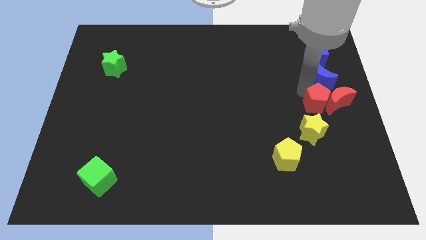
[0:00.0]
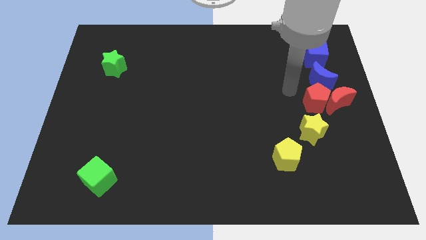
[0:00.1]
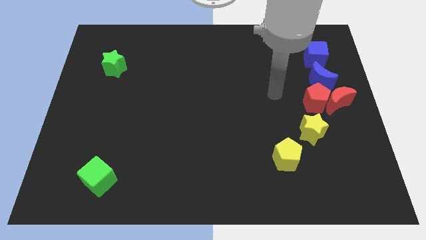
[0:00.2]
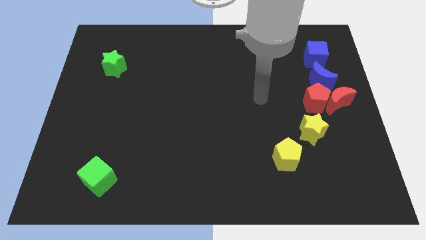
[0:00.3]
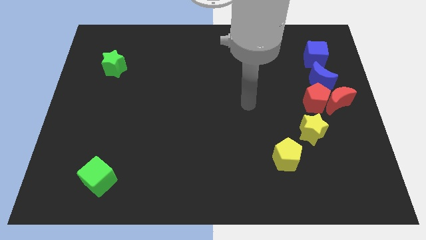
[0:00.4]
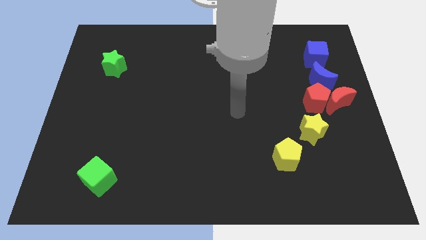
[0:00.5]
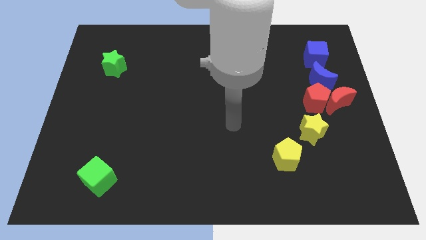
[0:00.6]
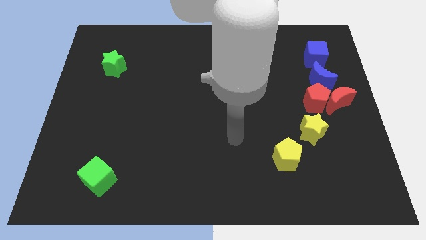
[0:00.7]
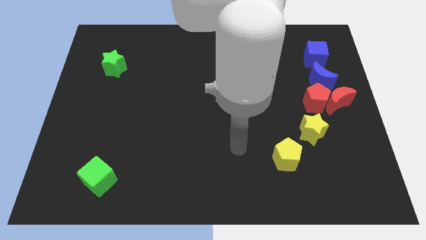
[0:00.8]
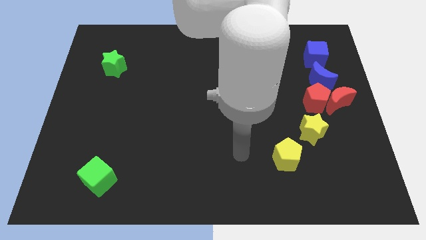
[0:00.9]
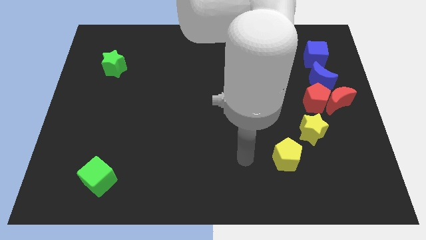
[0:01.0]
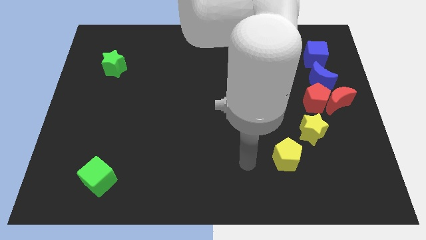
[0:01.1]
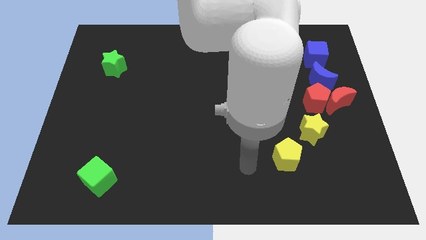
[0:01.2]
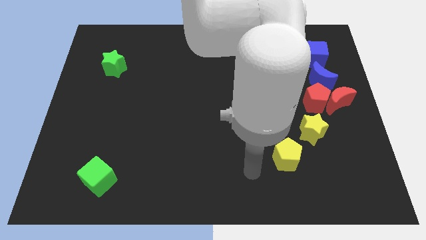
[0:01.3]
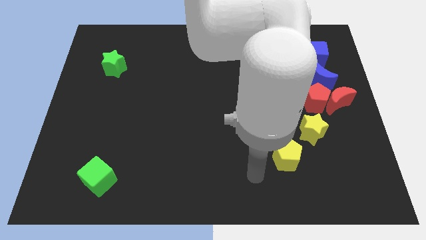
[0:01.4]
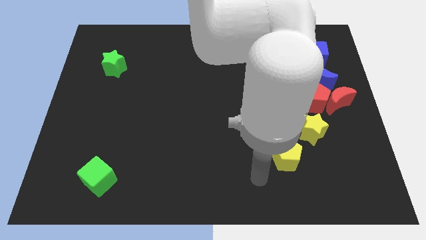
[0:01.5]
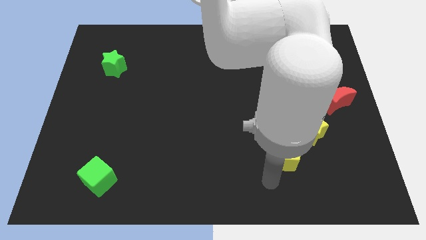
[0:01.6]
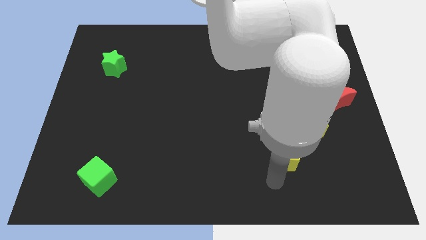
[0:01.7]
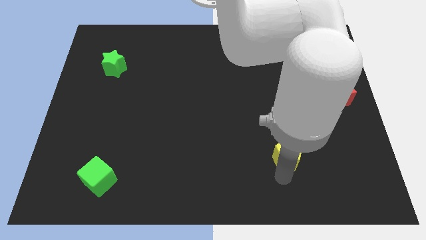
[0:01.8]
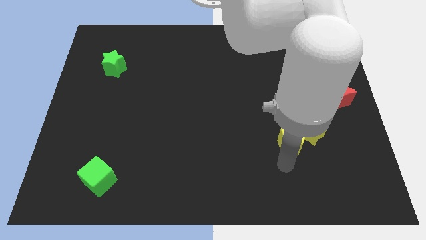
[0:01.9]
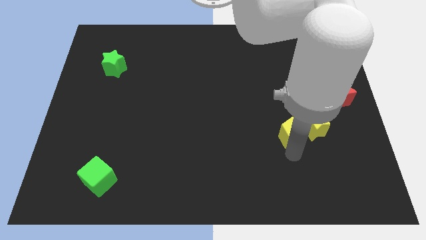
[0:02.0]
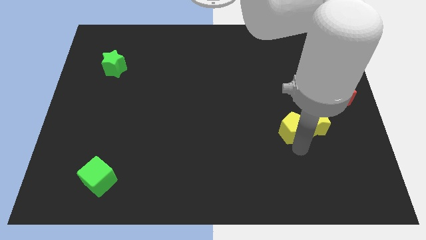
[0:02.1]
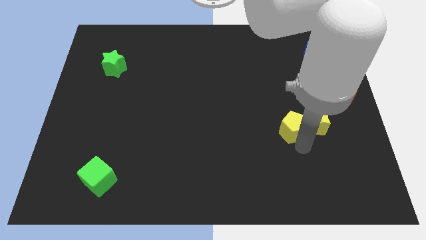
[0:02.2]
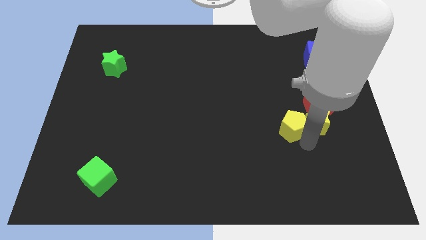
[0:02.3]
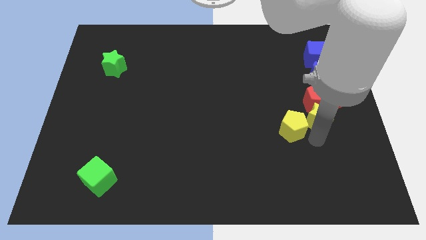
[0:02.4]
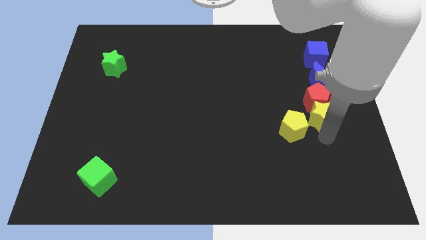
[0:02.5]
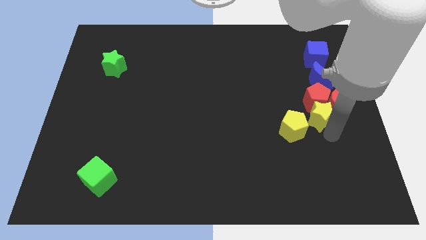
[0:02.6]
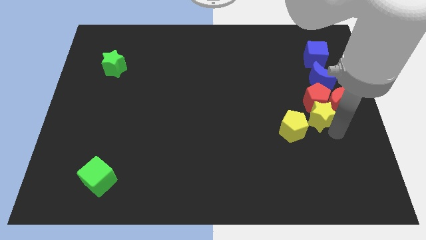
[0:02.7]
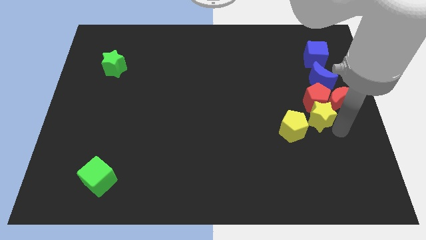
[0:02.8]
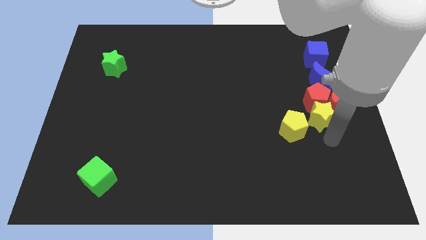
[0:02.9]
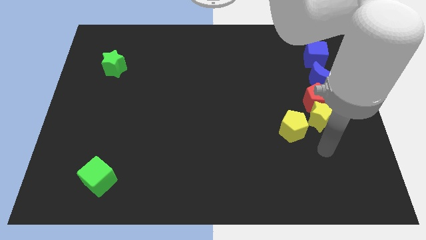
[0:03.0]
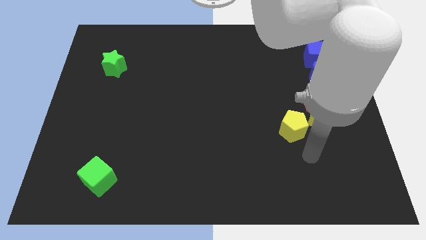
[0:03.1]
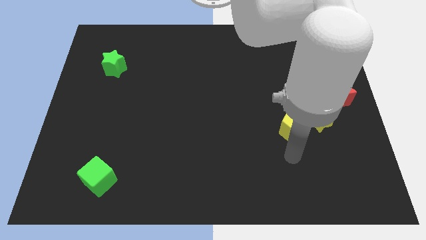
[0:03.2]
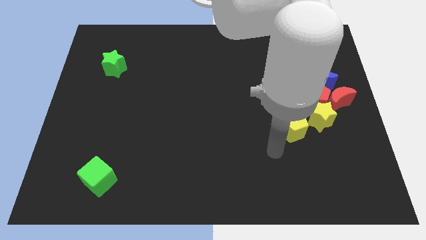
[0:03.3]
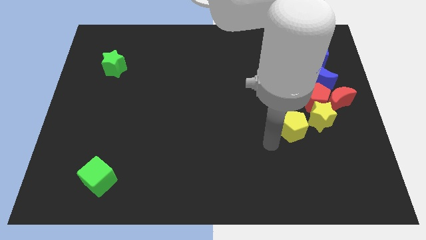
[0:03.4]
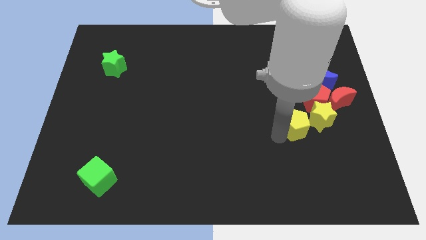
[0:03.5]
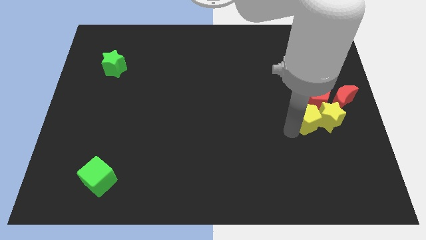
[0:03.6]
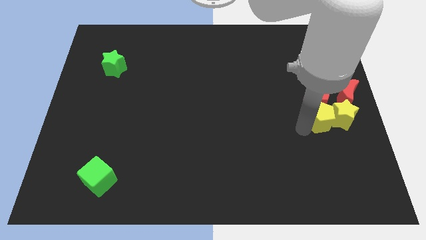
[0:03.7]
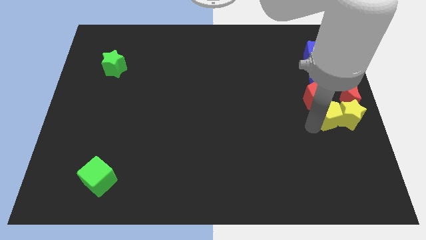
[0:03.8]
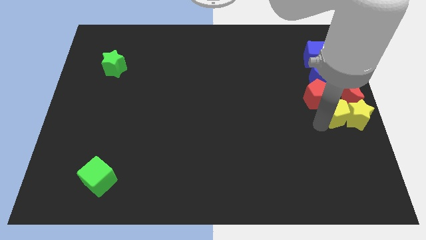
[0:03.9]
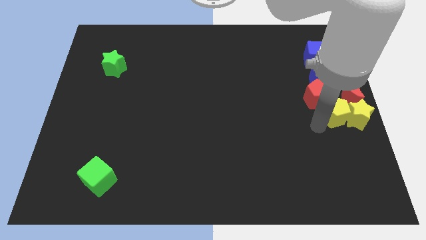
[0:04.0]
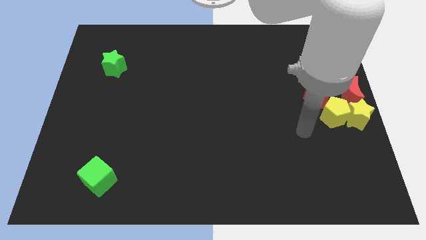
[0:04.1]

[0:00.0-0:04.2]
move the yellow blocks to the center right

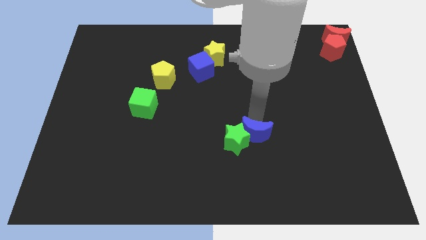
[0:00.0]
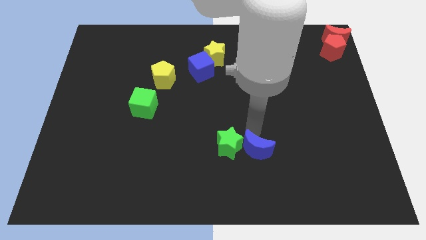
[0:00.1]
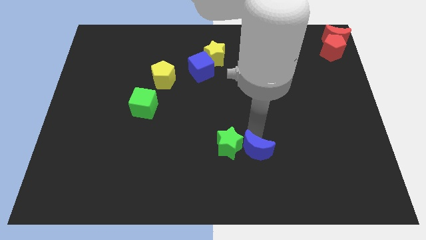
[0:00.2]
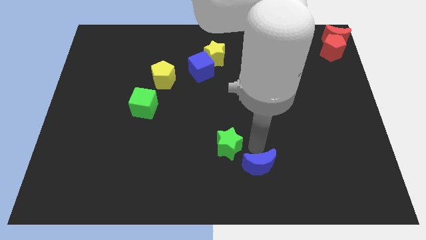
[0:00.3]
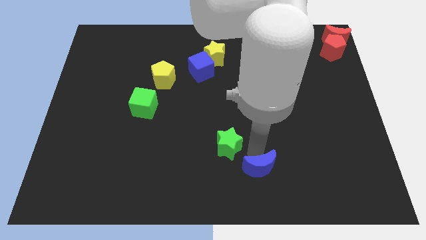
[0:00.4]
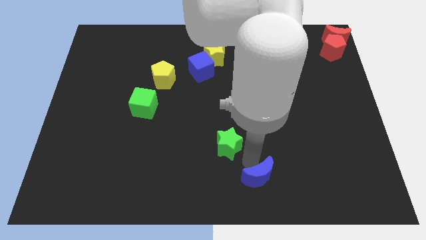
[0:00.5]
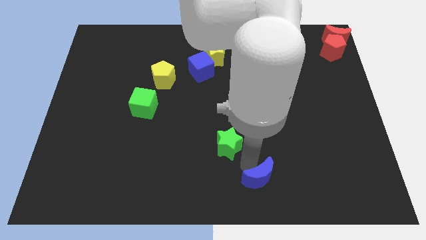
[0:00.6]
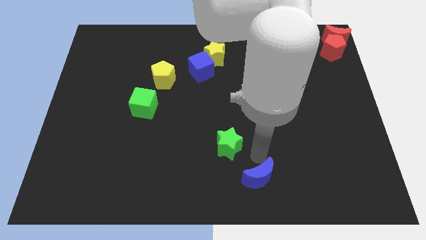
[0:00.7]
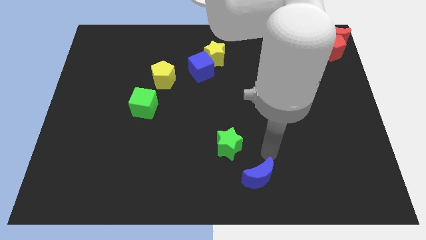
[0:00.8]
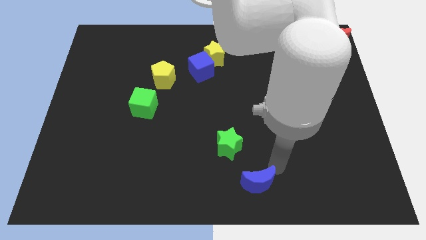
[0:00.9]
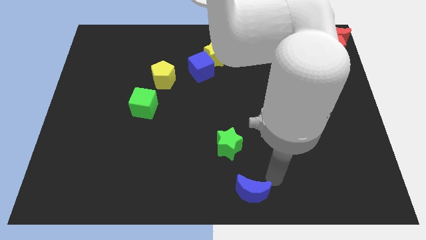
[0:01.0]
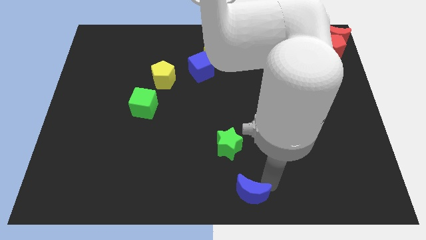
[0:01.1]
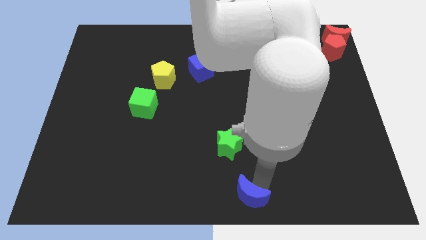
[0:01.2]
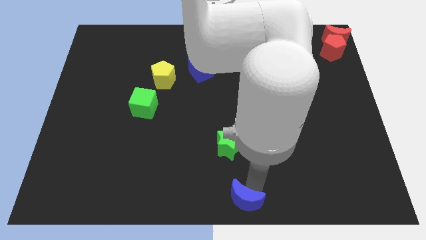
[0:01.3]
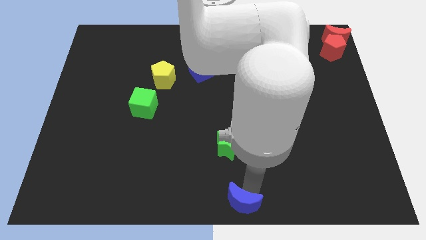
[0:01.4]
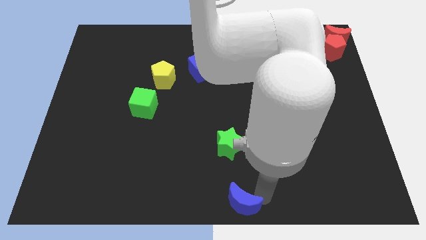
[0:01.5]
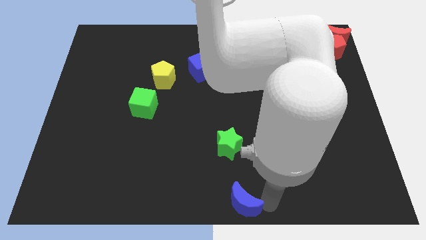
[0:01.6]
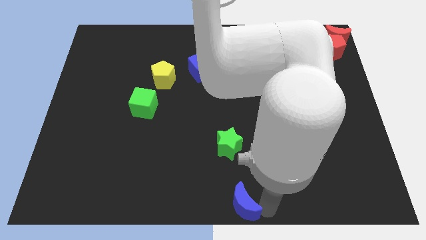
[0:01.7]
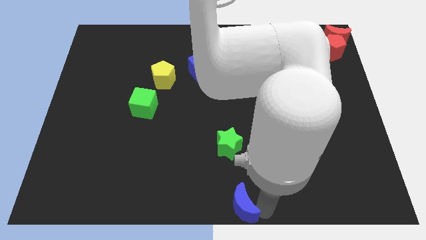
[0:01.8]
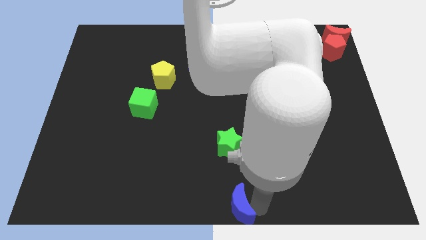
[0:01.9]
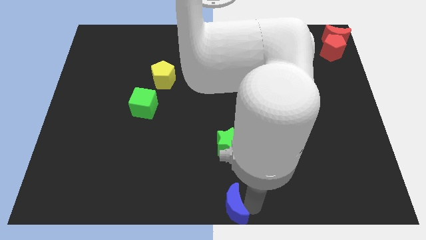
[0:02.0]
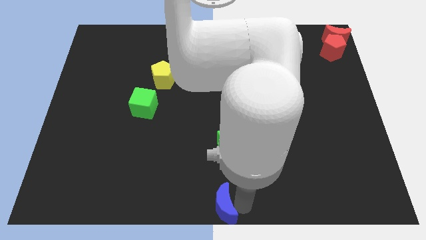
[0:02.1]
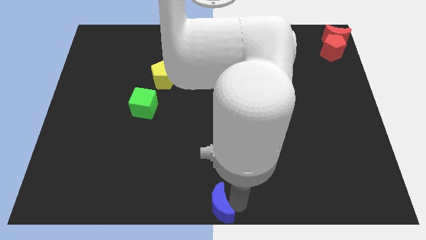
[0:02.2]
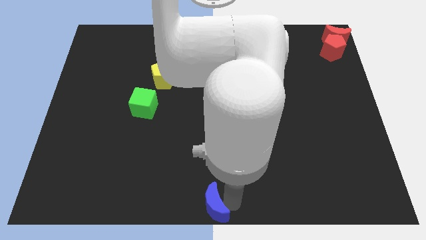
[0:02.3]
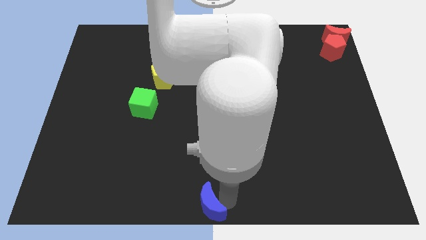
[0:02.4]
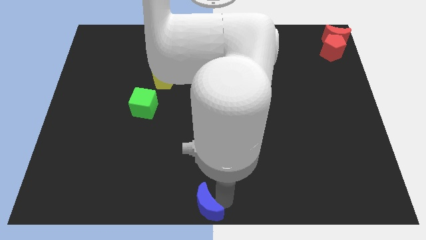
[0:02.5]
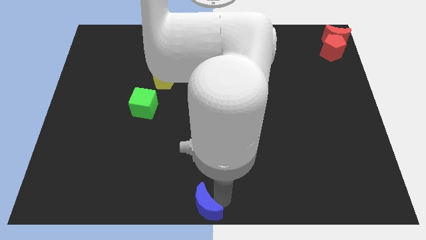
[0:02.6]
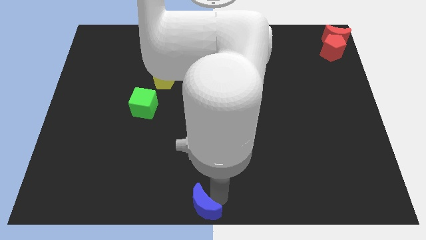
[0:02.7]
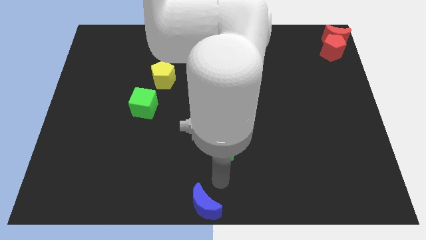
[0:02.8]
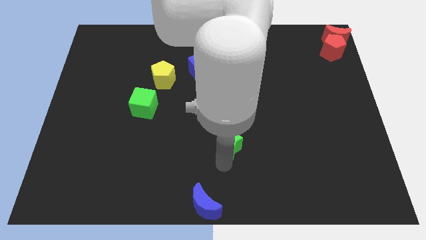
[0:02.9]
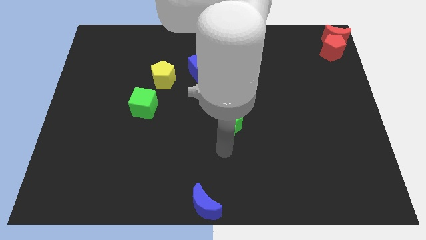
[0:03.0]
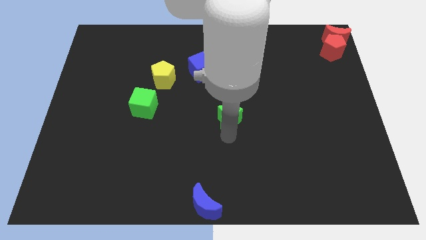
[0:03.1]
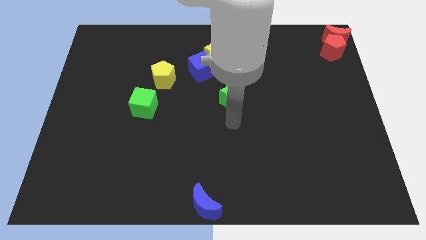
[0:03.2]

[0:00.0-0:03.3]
move the blue moon bottom center of the board

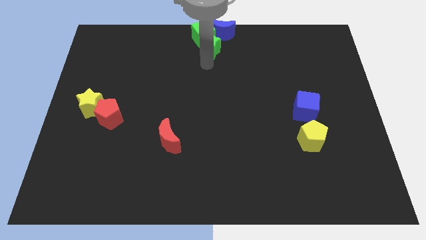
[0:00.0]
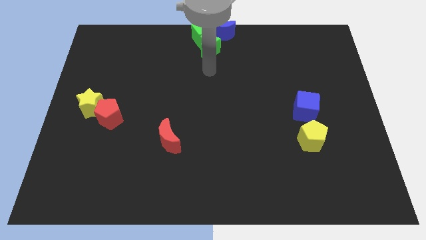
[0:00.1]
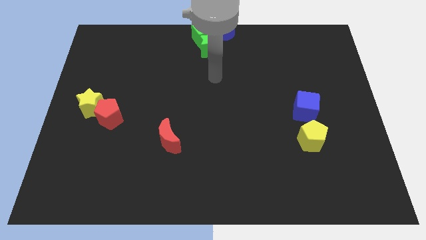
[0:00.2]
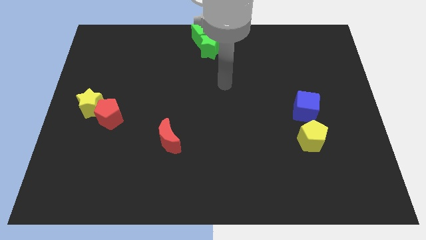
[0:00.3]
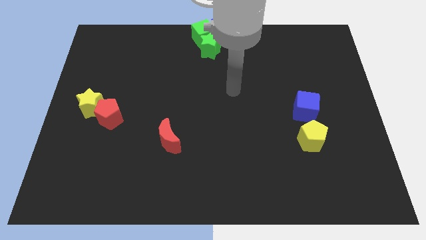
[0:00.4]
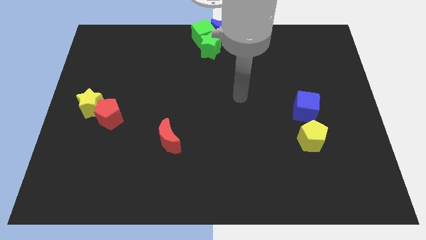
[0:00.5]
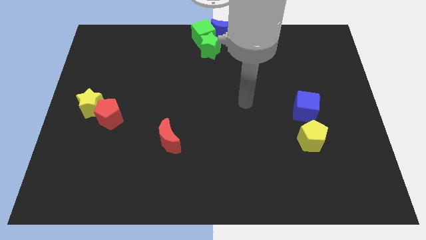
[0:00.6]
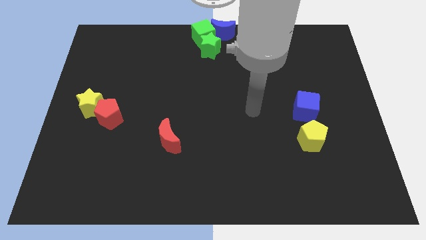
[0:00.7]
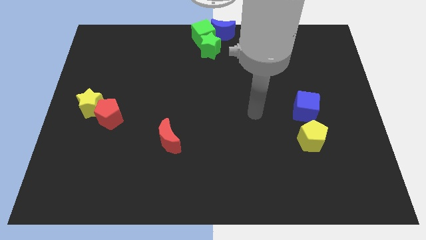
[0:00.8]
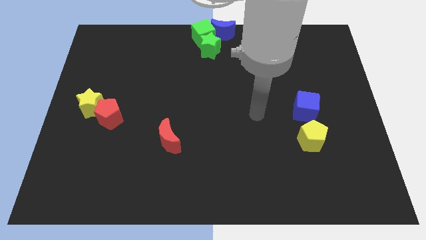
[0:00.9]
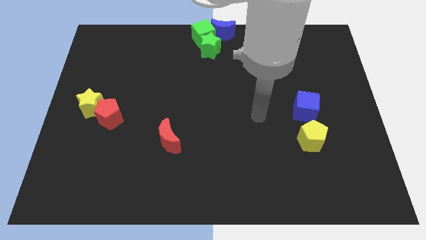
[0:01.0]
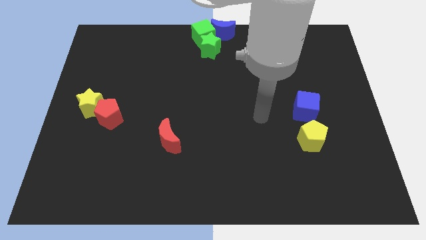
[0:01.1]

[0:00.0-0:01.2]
move your arm away from green star
